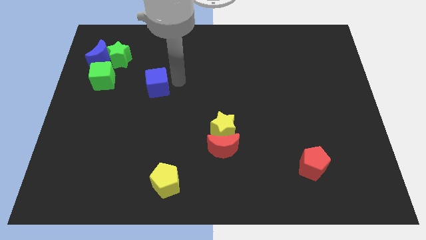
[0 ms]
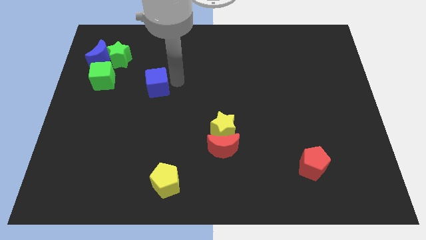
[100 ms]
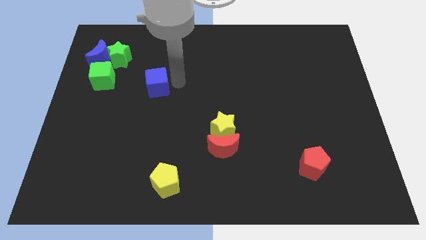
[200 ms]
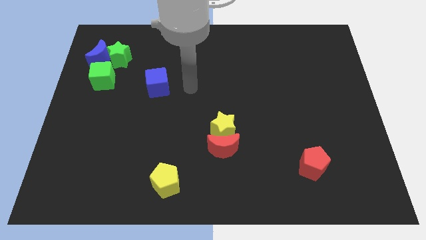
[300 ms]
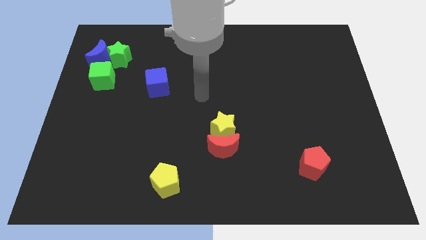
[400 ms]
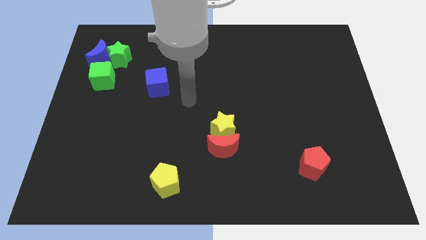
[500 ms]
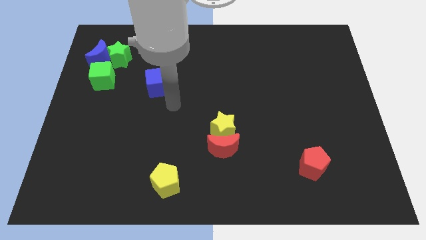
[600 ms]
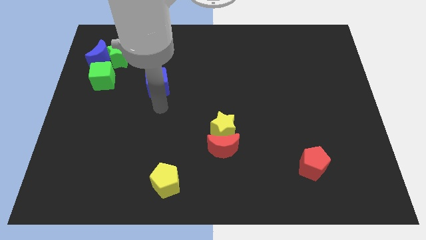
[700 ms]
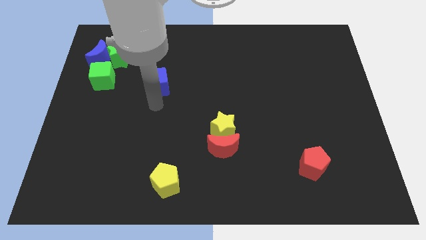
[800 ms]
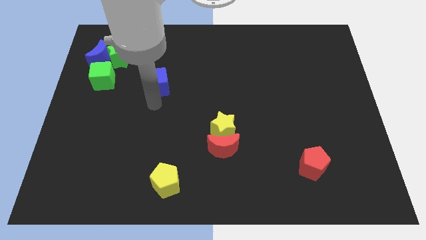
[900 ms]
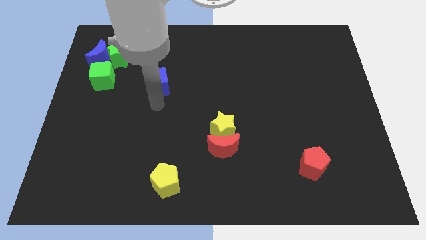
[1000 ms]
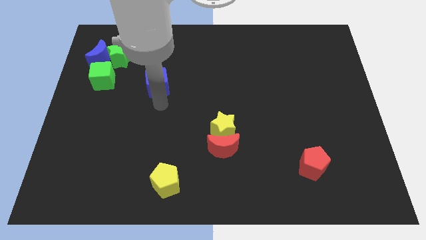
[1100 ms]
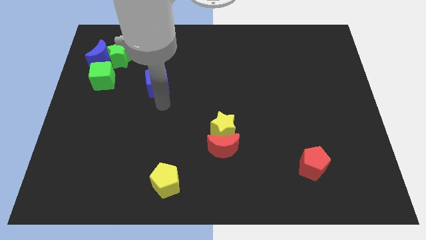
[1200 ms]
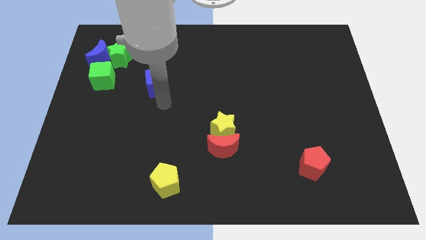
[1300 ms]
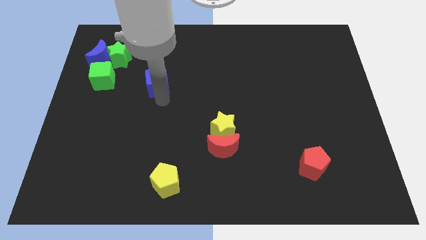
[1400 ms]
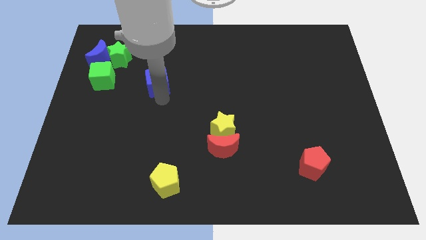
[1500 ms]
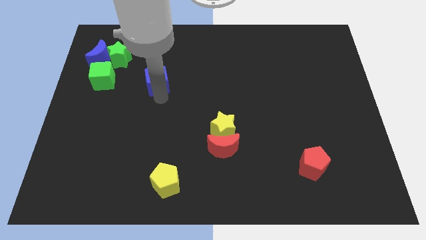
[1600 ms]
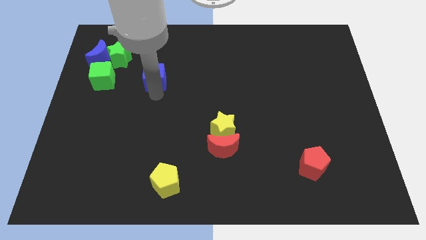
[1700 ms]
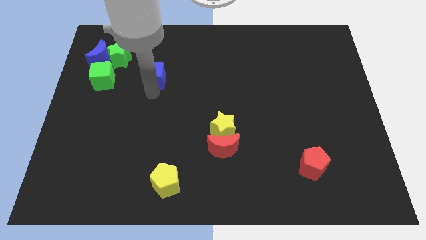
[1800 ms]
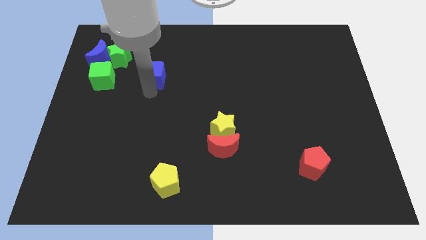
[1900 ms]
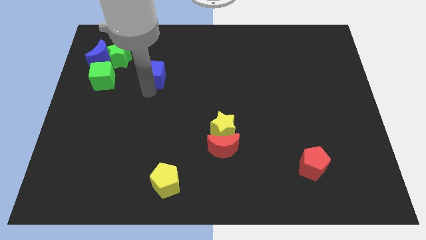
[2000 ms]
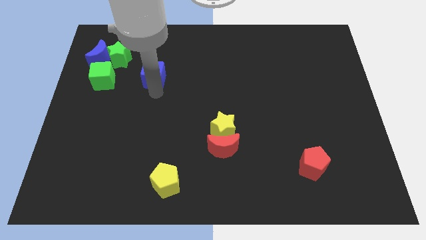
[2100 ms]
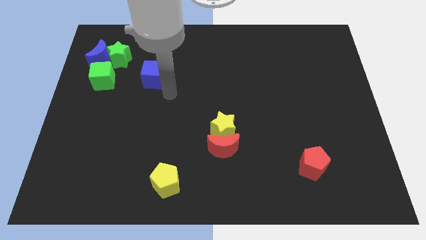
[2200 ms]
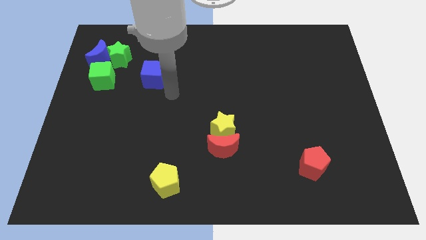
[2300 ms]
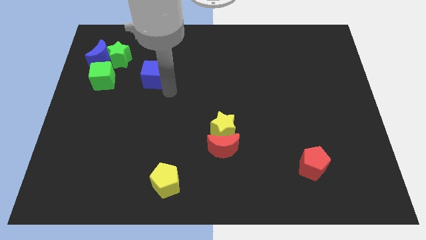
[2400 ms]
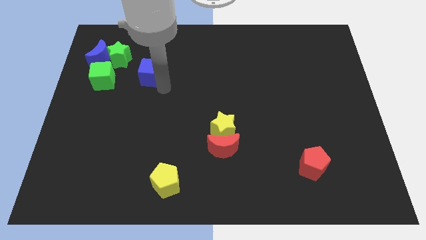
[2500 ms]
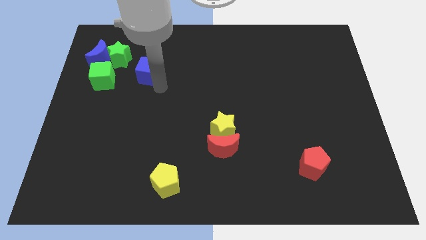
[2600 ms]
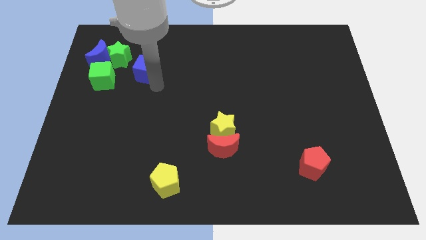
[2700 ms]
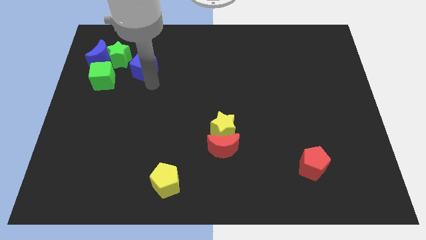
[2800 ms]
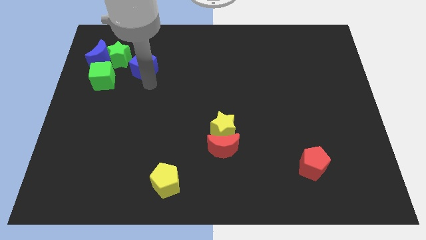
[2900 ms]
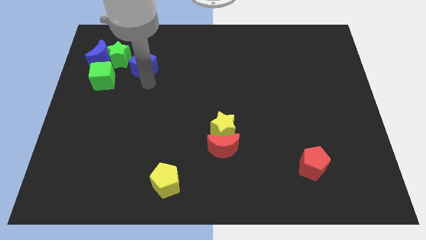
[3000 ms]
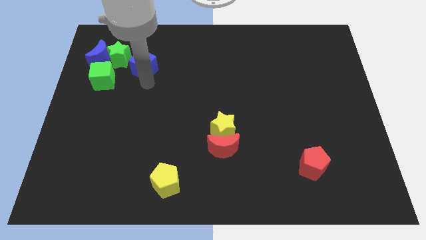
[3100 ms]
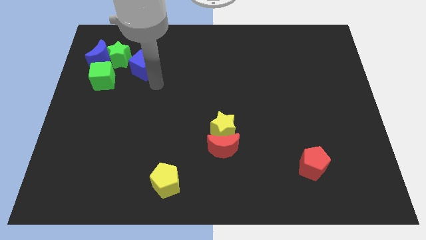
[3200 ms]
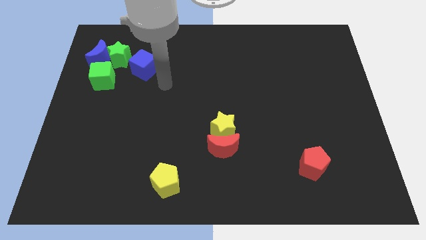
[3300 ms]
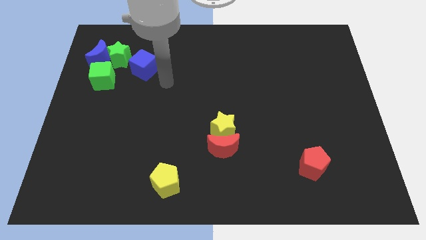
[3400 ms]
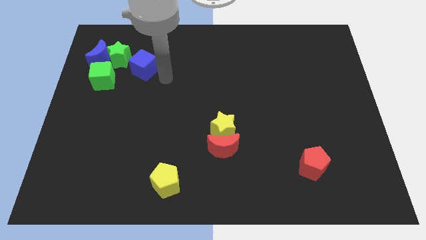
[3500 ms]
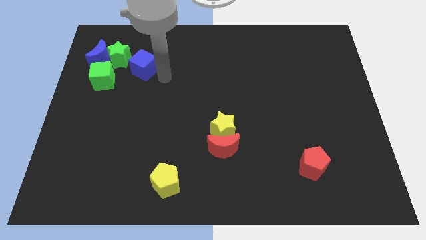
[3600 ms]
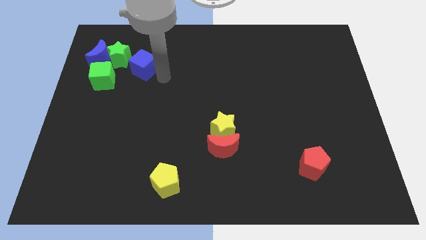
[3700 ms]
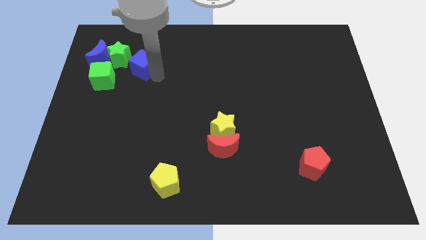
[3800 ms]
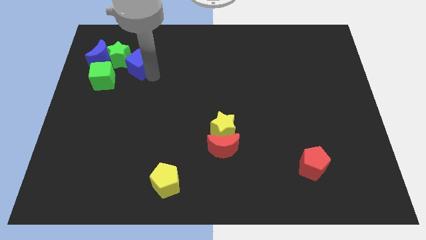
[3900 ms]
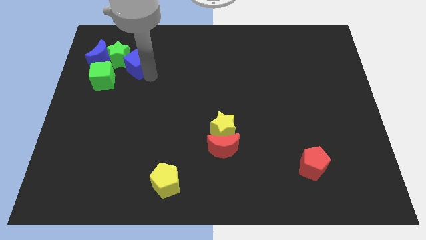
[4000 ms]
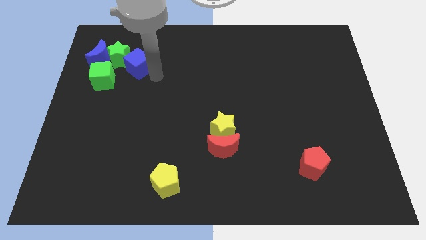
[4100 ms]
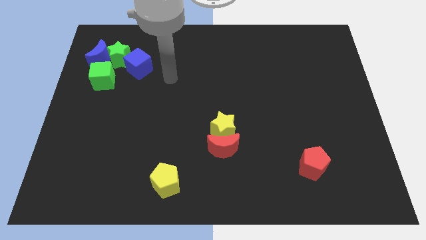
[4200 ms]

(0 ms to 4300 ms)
slide the blue cube near to the right side of the green star

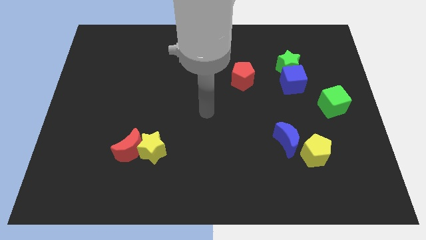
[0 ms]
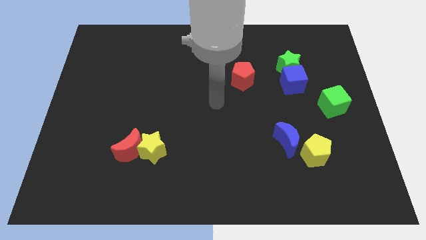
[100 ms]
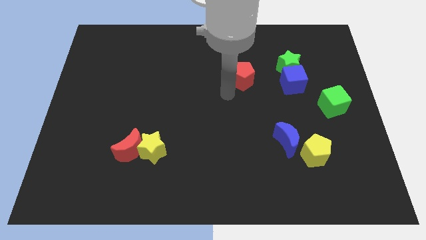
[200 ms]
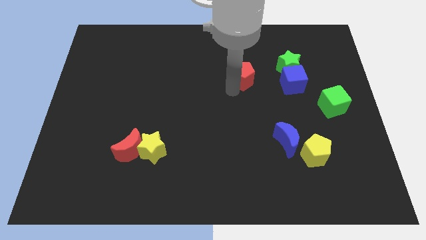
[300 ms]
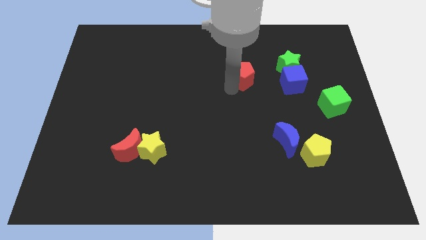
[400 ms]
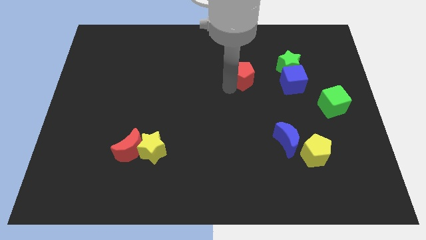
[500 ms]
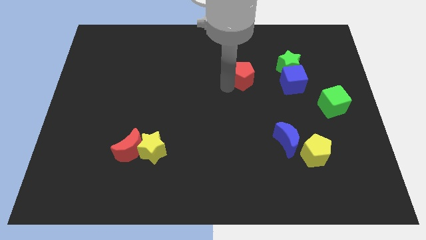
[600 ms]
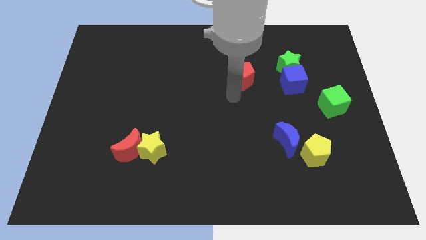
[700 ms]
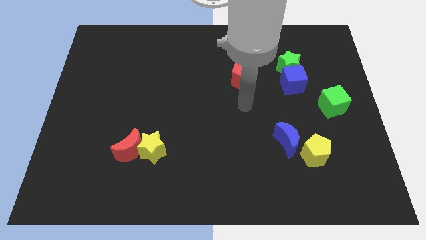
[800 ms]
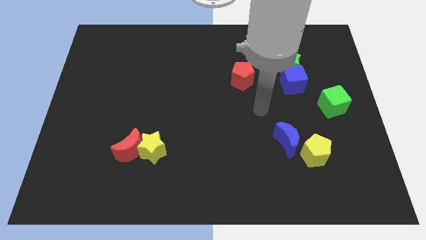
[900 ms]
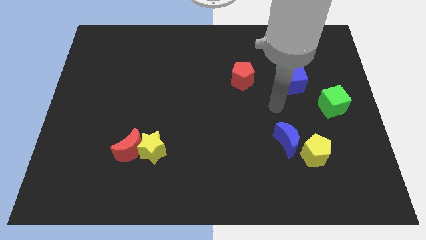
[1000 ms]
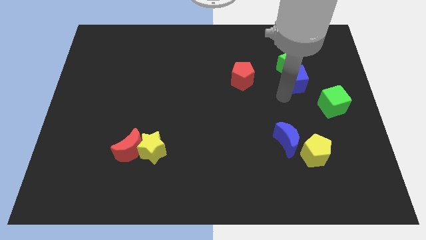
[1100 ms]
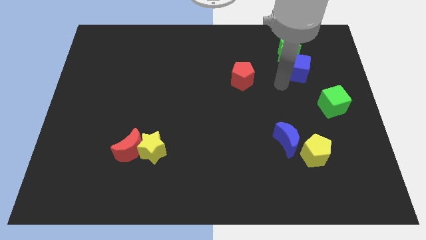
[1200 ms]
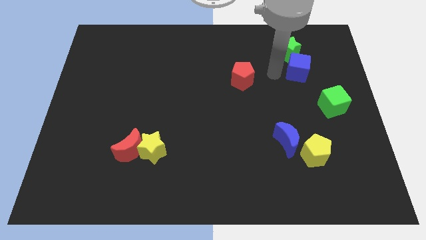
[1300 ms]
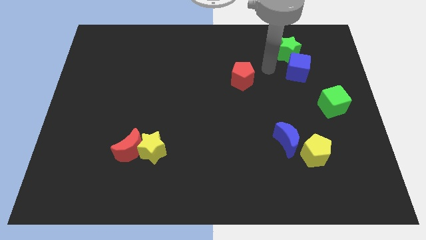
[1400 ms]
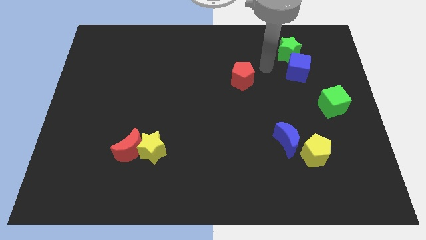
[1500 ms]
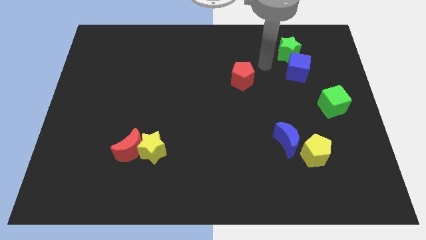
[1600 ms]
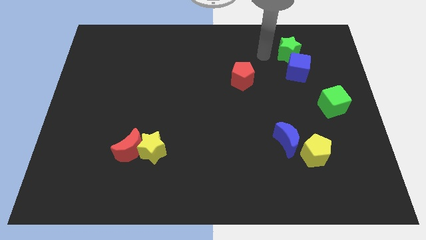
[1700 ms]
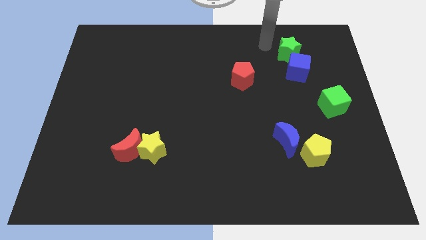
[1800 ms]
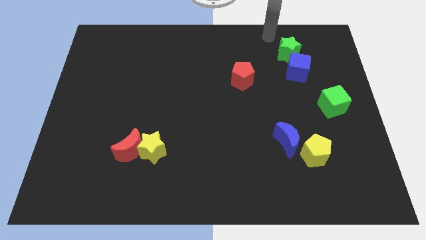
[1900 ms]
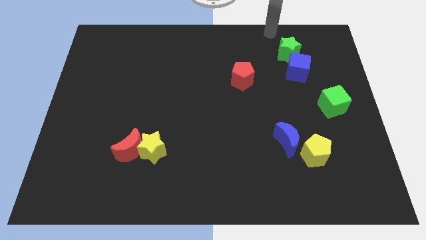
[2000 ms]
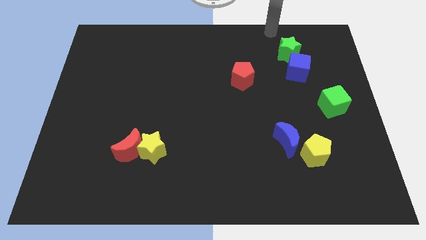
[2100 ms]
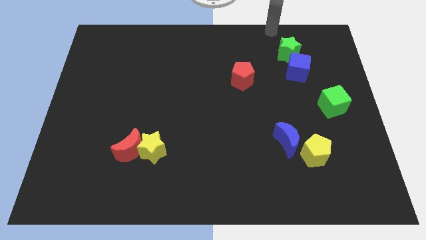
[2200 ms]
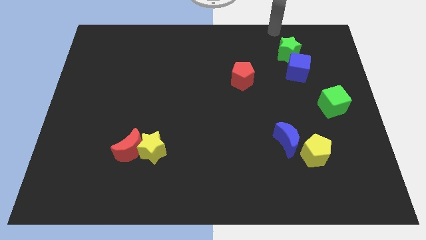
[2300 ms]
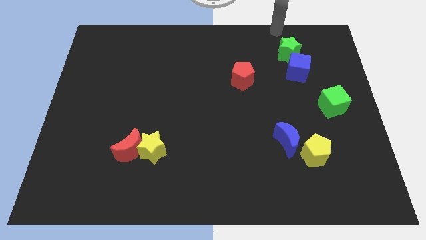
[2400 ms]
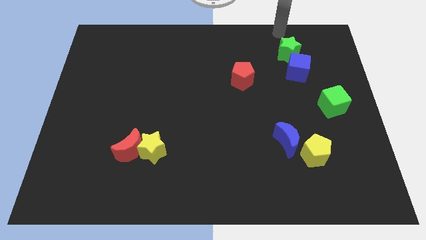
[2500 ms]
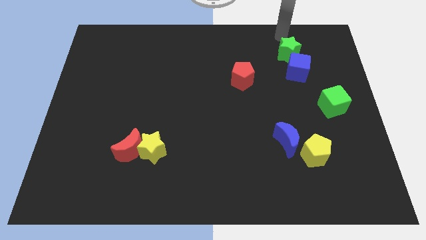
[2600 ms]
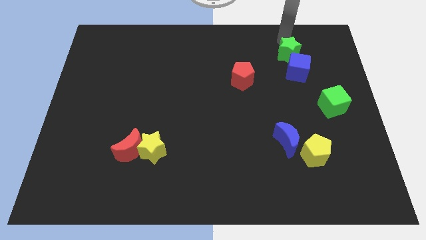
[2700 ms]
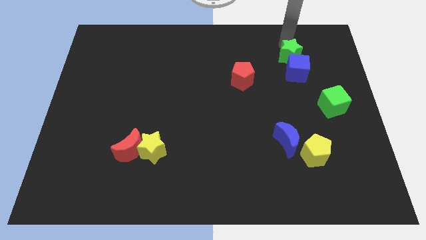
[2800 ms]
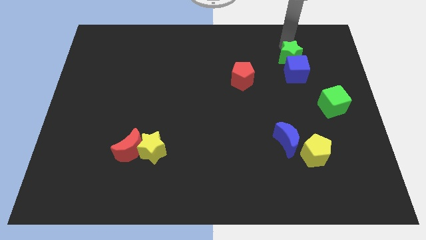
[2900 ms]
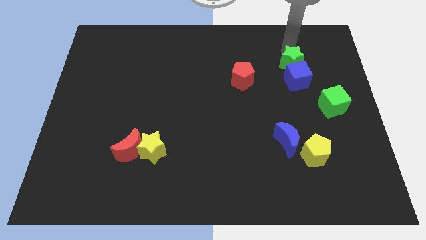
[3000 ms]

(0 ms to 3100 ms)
push the green star into the blue cube

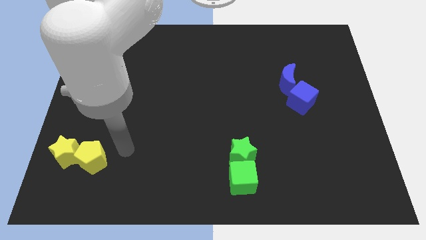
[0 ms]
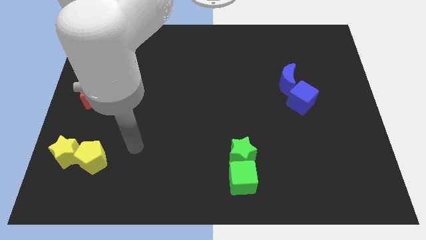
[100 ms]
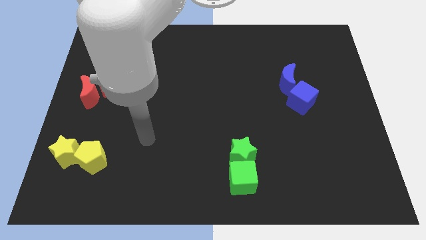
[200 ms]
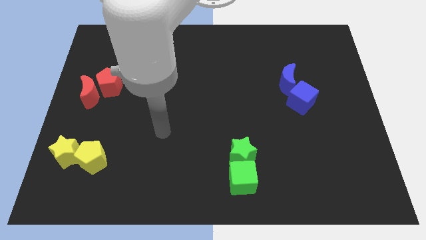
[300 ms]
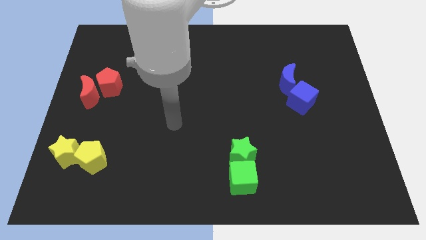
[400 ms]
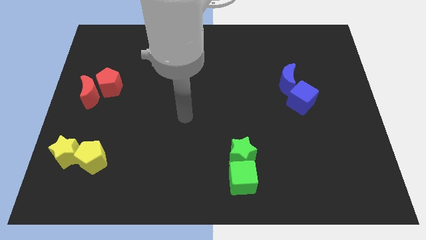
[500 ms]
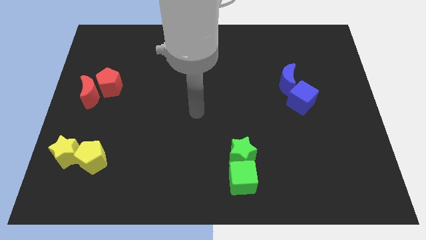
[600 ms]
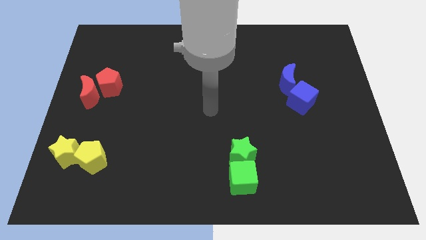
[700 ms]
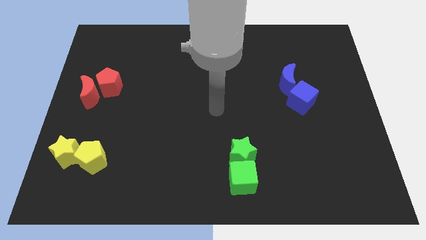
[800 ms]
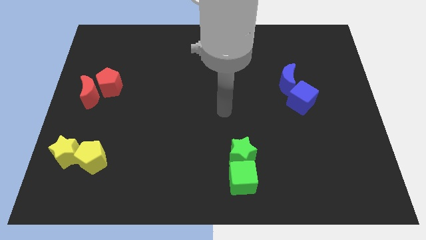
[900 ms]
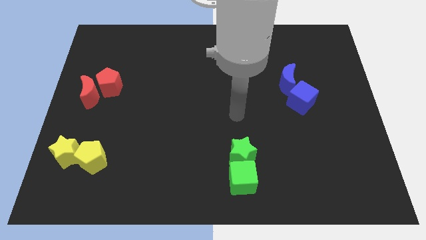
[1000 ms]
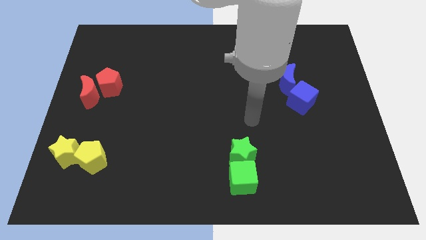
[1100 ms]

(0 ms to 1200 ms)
go and place your hand above the group of green blocks

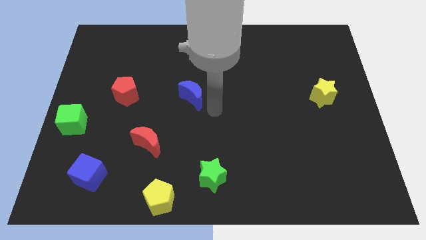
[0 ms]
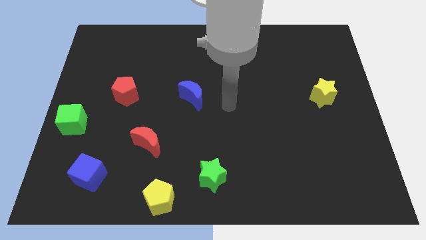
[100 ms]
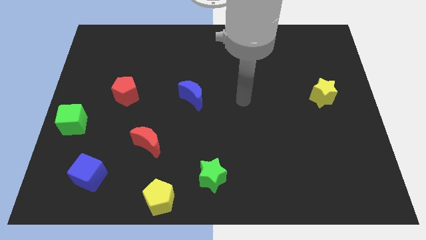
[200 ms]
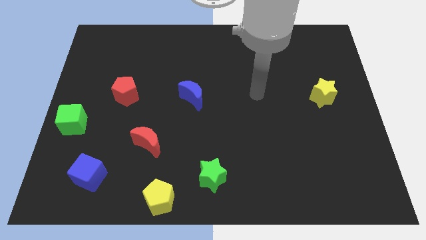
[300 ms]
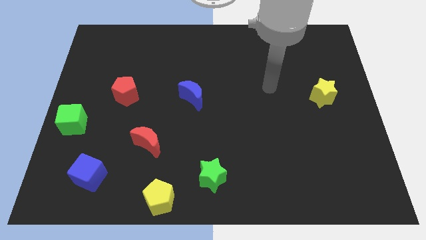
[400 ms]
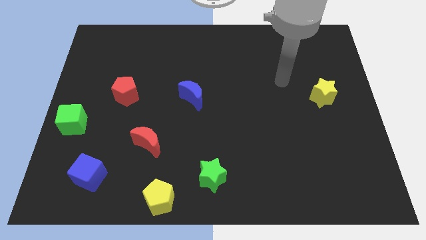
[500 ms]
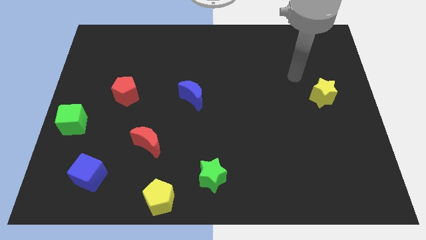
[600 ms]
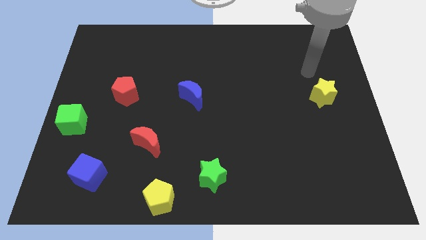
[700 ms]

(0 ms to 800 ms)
move your hand to the top of the yellow star
